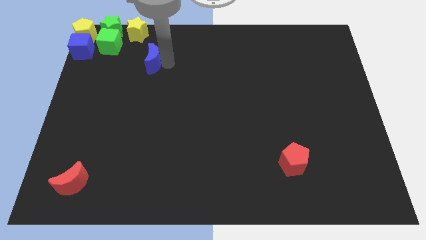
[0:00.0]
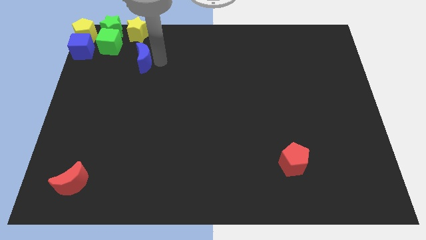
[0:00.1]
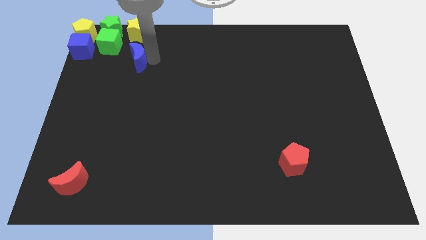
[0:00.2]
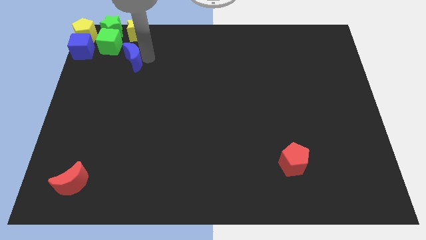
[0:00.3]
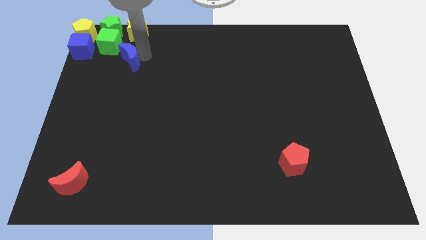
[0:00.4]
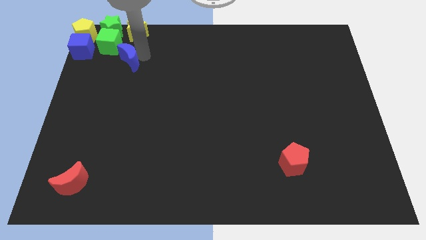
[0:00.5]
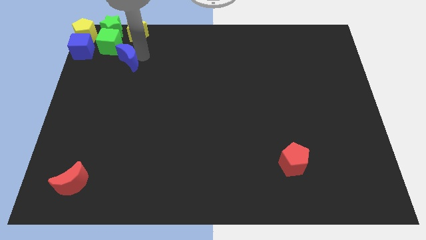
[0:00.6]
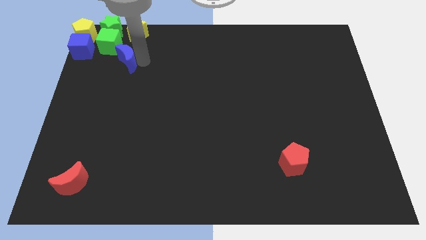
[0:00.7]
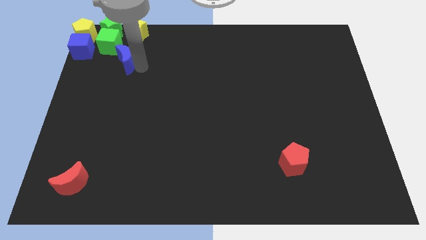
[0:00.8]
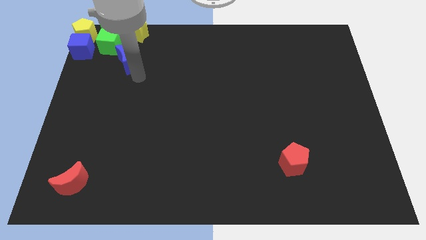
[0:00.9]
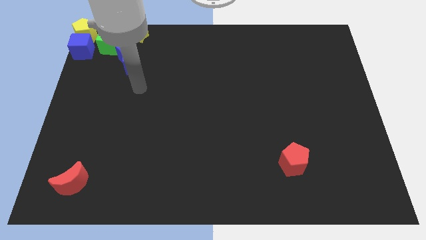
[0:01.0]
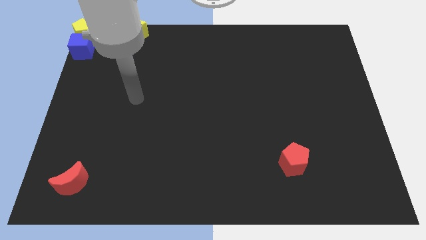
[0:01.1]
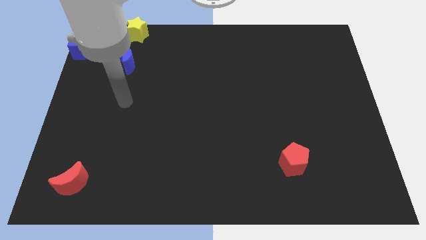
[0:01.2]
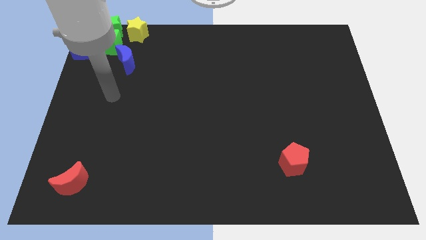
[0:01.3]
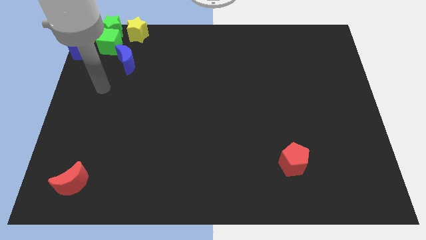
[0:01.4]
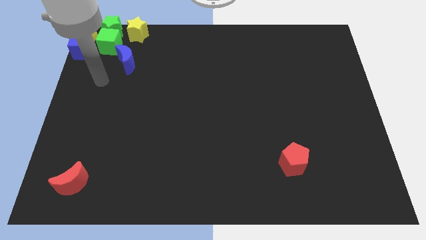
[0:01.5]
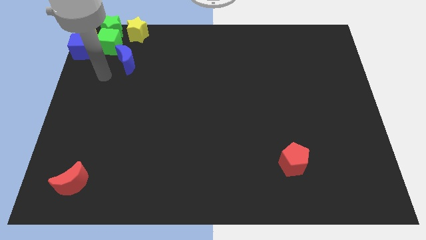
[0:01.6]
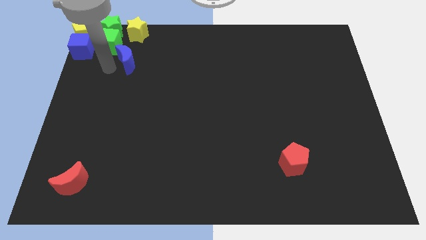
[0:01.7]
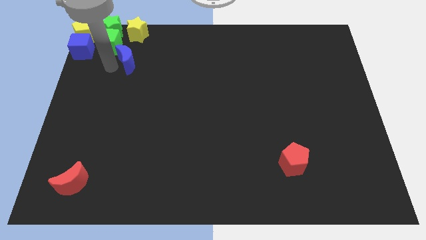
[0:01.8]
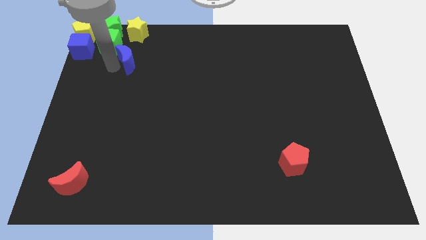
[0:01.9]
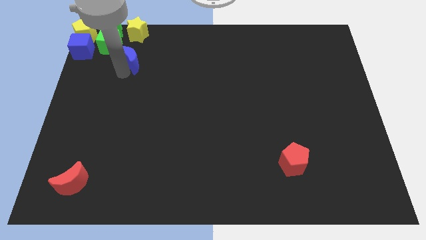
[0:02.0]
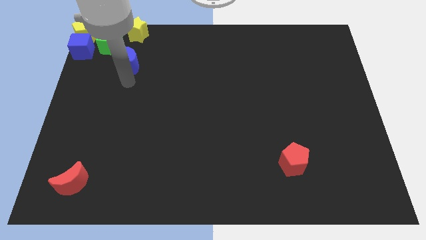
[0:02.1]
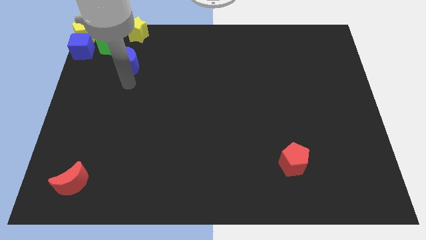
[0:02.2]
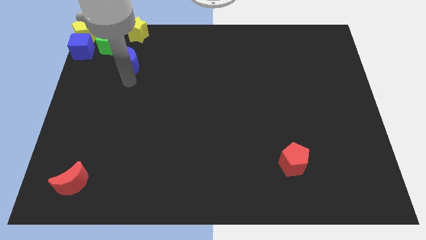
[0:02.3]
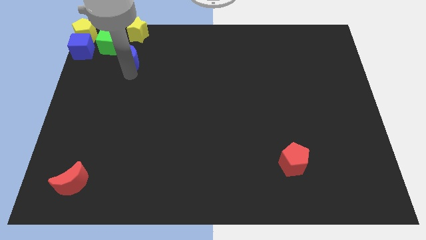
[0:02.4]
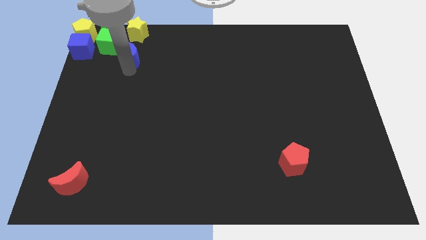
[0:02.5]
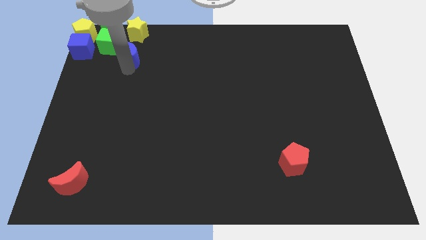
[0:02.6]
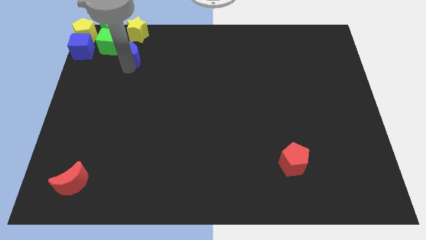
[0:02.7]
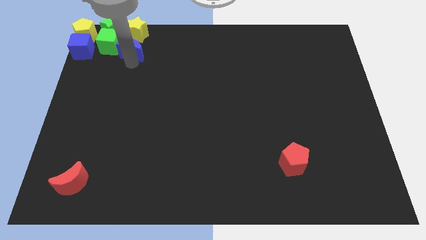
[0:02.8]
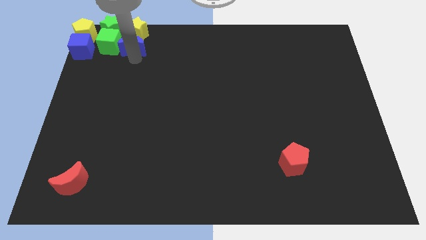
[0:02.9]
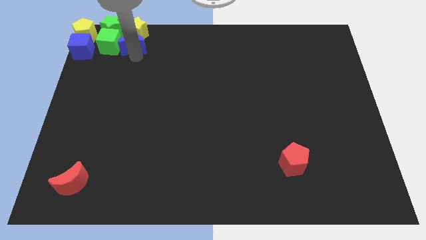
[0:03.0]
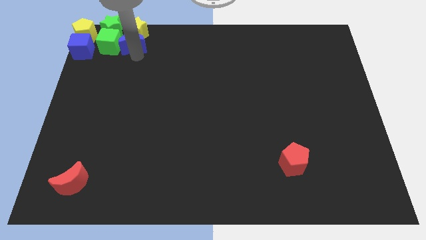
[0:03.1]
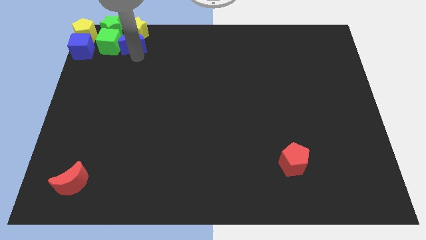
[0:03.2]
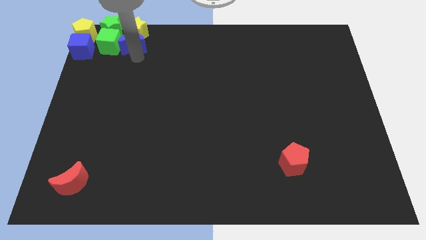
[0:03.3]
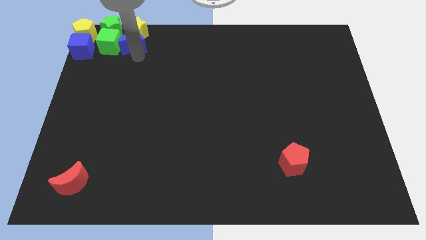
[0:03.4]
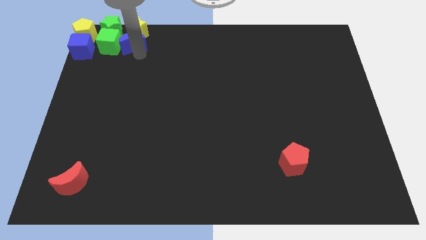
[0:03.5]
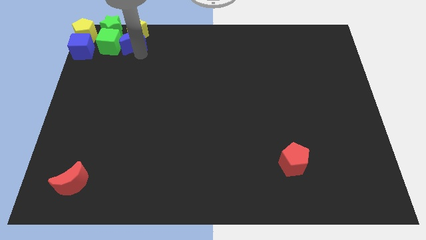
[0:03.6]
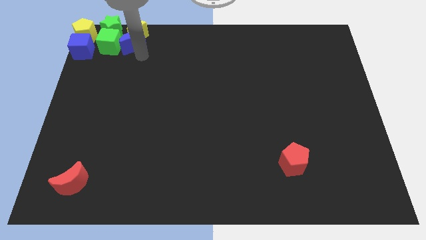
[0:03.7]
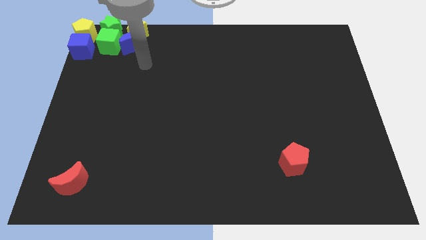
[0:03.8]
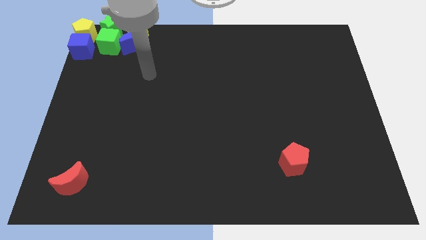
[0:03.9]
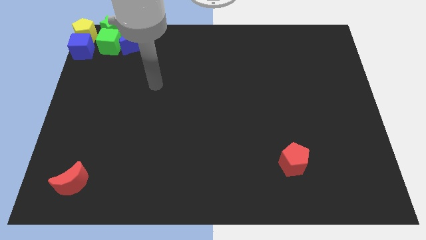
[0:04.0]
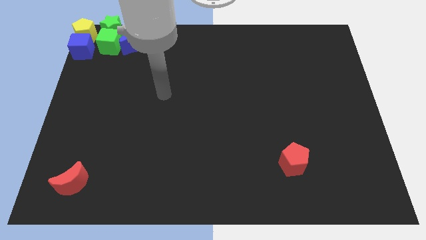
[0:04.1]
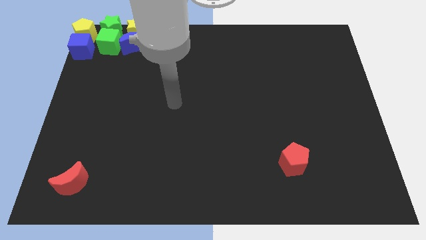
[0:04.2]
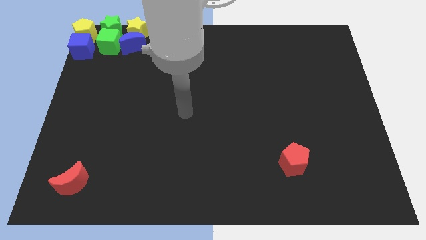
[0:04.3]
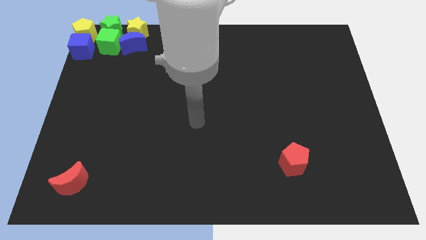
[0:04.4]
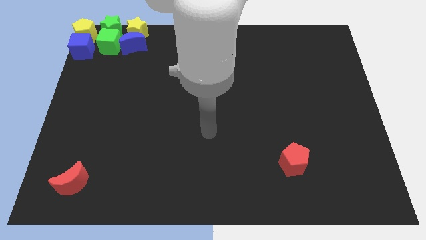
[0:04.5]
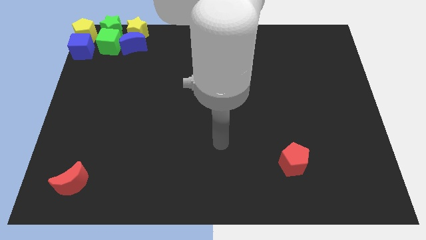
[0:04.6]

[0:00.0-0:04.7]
push the blue crescent to the bottom of the yellow star

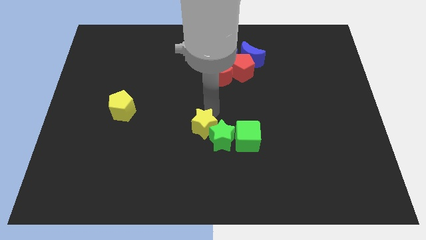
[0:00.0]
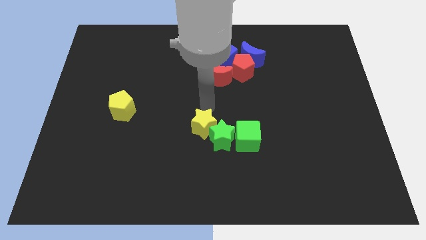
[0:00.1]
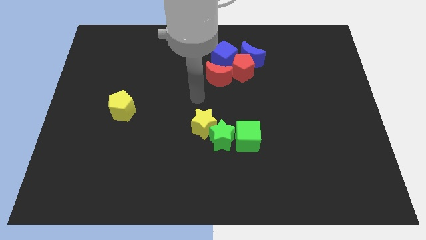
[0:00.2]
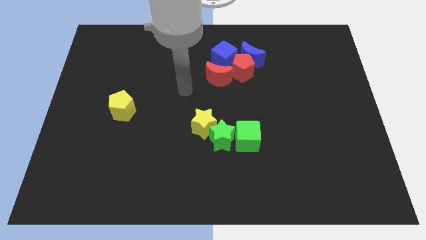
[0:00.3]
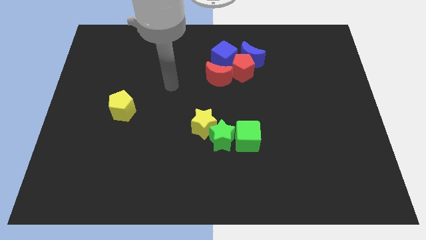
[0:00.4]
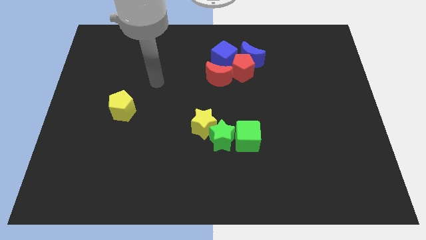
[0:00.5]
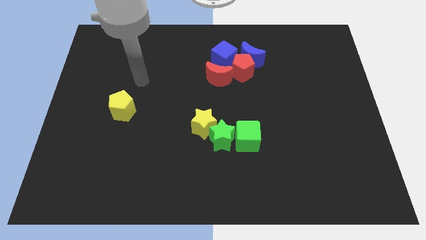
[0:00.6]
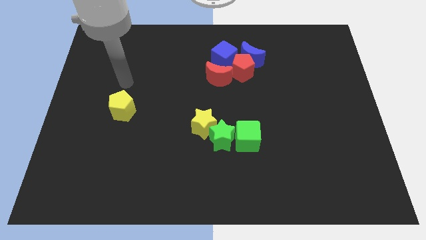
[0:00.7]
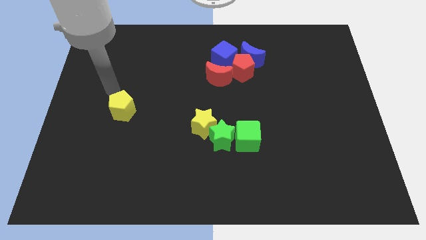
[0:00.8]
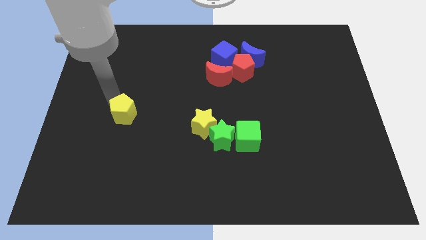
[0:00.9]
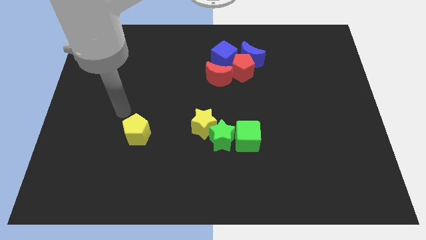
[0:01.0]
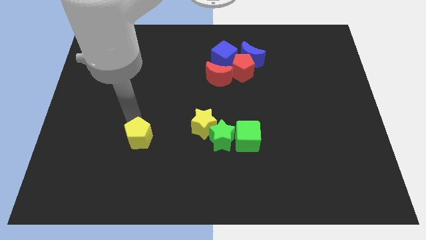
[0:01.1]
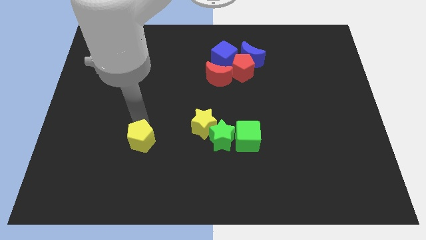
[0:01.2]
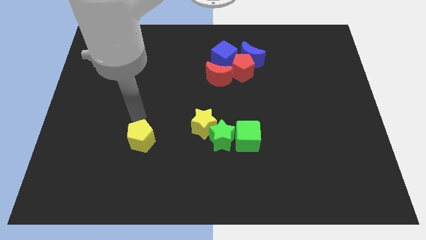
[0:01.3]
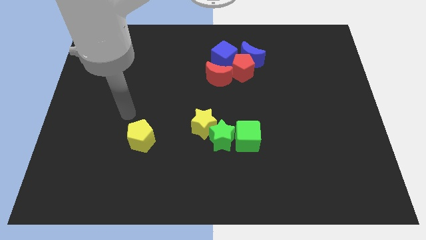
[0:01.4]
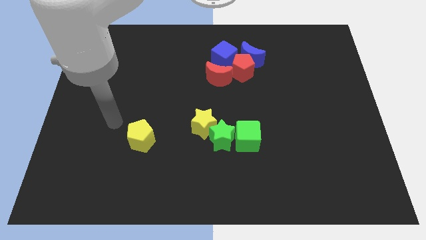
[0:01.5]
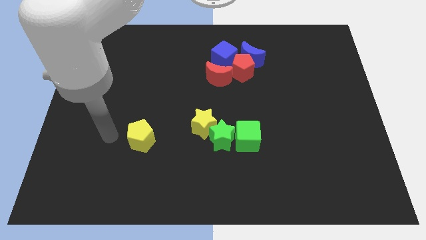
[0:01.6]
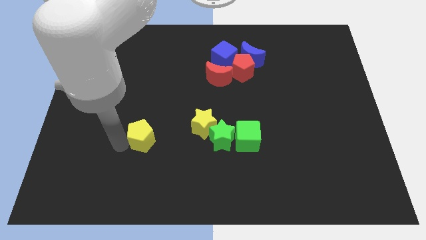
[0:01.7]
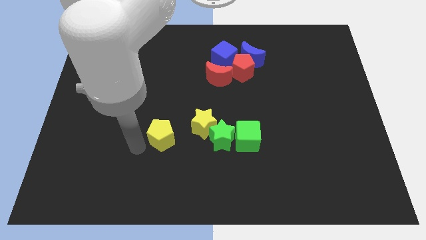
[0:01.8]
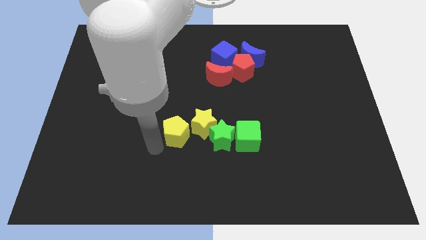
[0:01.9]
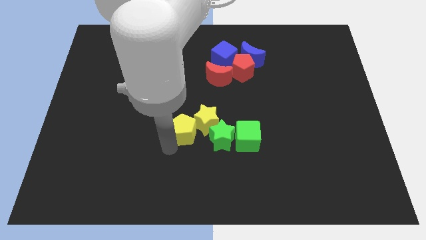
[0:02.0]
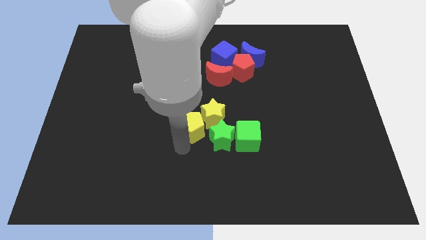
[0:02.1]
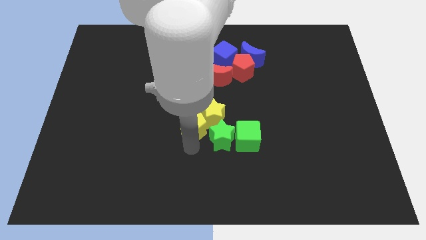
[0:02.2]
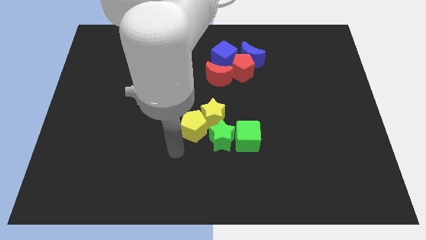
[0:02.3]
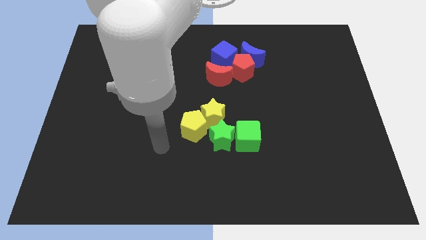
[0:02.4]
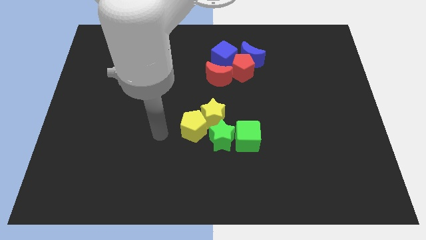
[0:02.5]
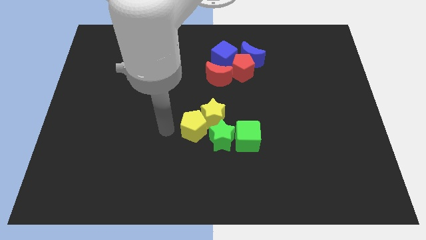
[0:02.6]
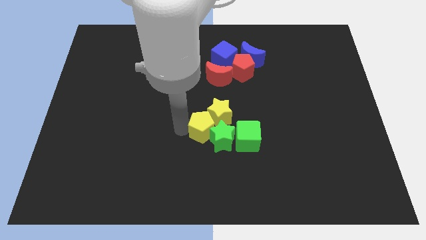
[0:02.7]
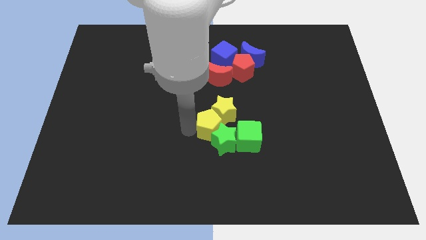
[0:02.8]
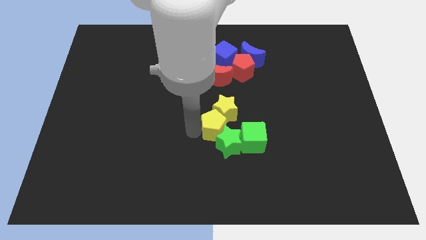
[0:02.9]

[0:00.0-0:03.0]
push the yellow pentagon into the group of blocks

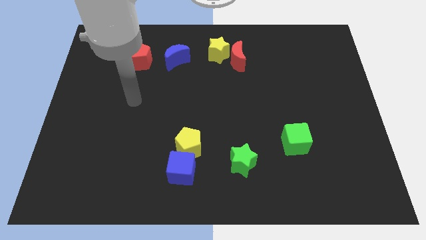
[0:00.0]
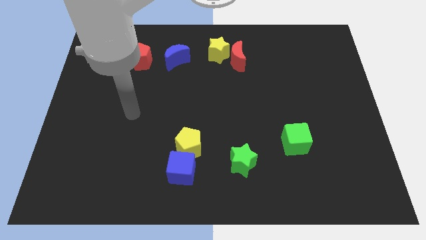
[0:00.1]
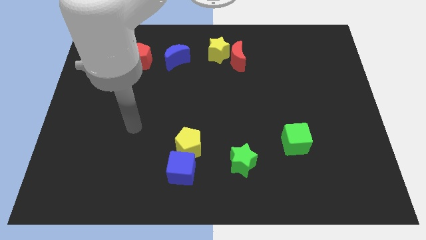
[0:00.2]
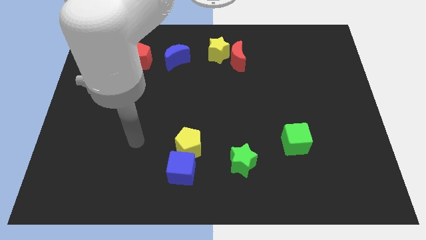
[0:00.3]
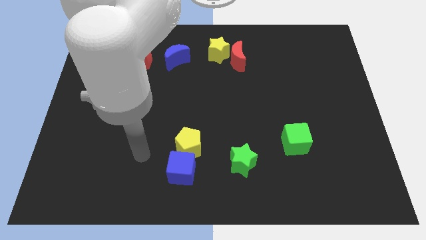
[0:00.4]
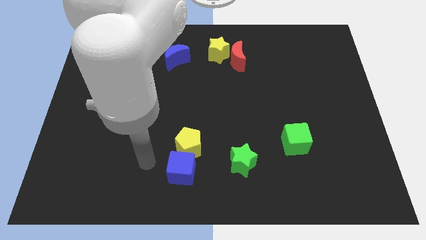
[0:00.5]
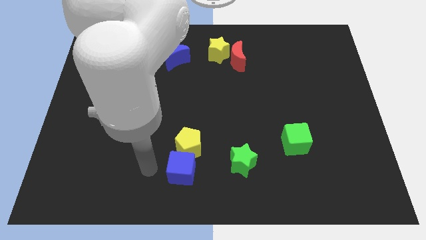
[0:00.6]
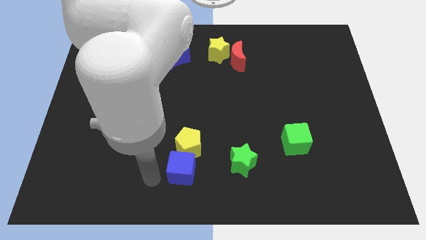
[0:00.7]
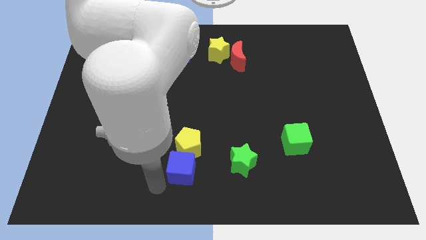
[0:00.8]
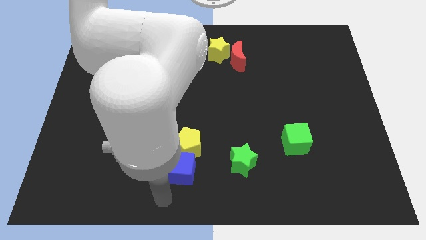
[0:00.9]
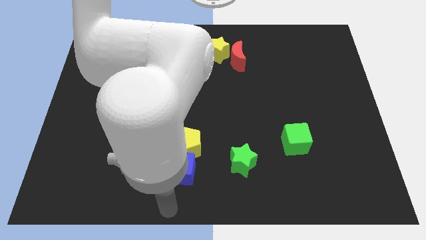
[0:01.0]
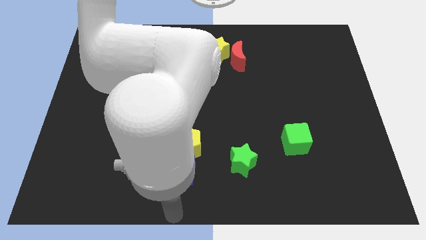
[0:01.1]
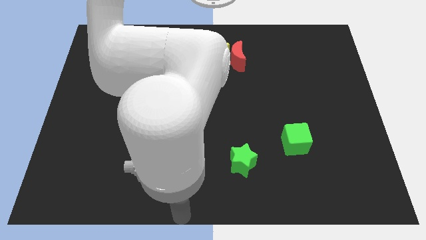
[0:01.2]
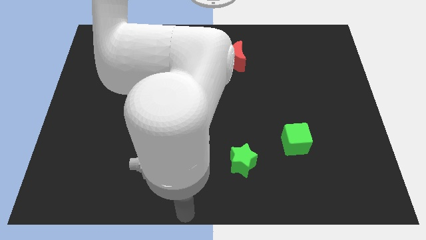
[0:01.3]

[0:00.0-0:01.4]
move the arm to the bottom of the blue cube
